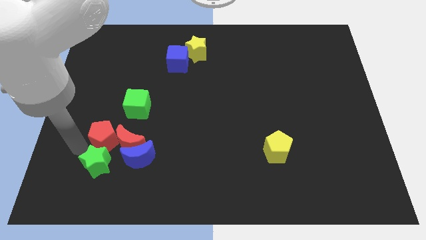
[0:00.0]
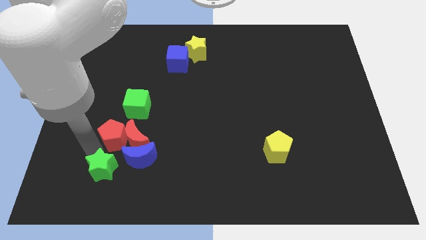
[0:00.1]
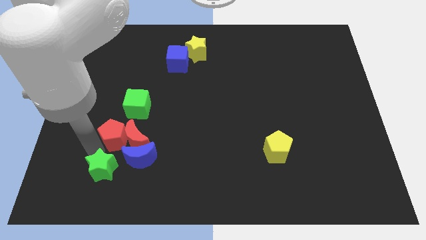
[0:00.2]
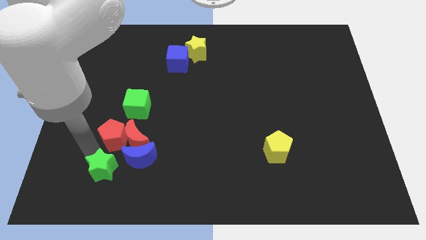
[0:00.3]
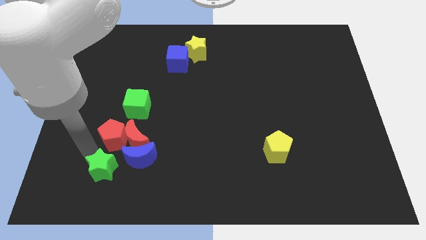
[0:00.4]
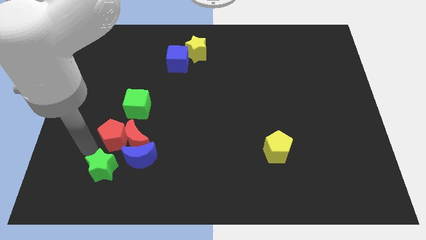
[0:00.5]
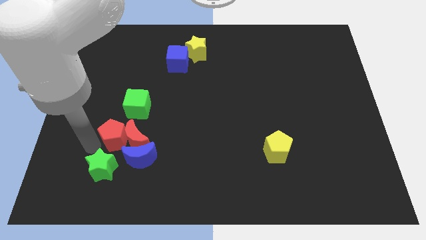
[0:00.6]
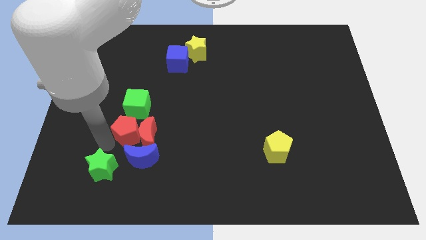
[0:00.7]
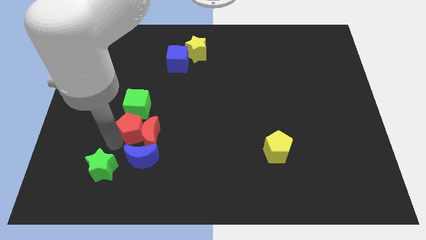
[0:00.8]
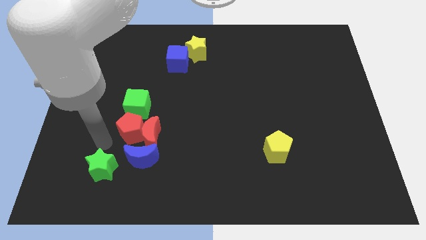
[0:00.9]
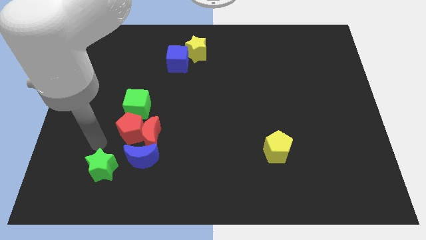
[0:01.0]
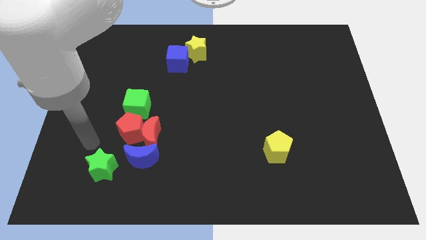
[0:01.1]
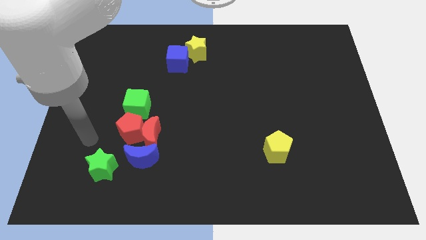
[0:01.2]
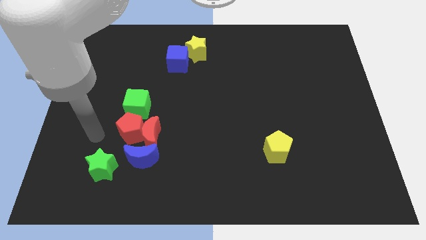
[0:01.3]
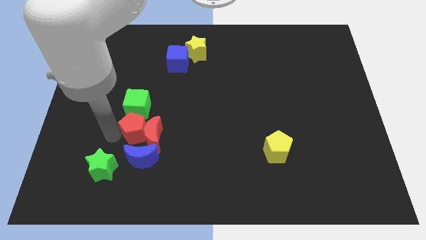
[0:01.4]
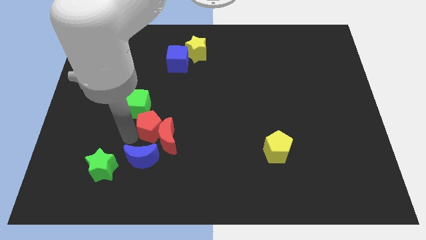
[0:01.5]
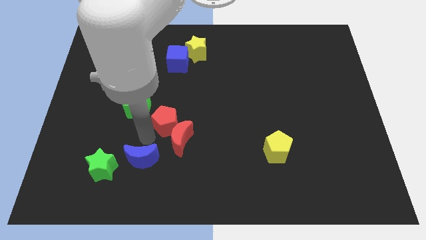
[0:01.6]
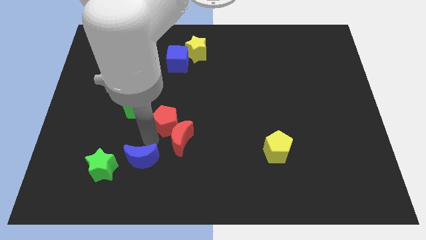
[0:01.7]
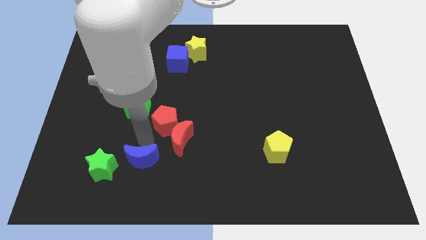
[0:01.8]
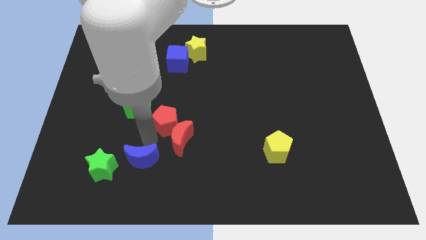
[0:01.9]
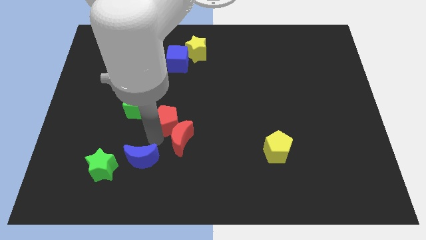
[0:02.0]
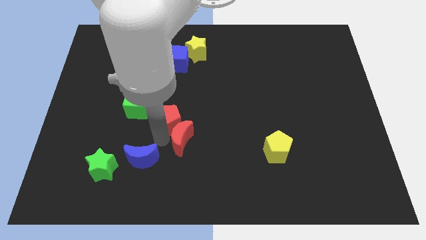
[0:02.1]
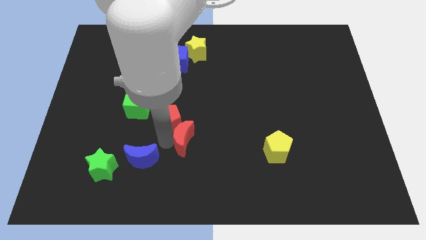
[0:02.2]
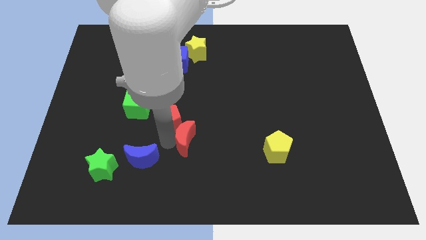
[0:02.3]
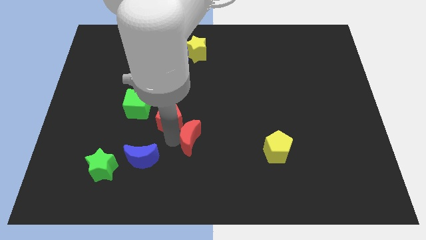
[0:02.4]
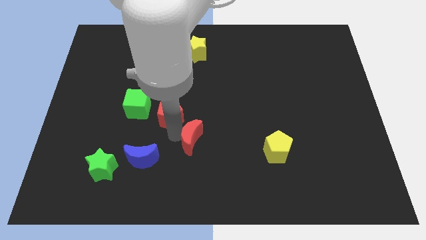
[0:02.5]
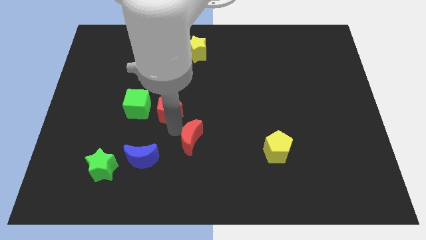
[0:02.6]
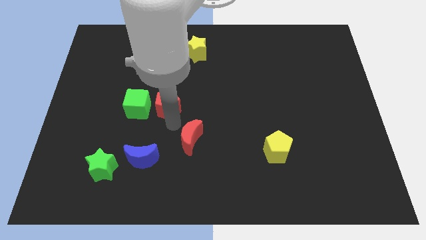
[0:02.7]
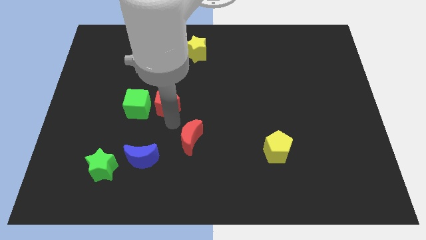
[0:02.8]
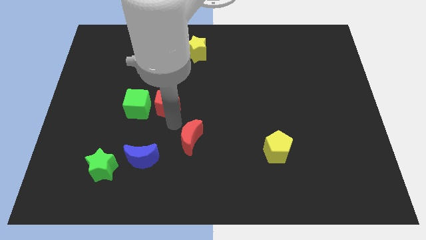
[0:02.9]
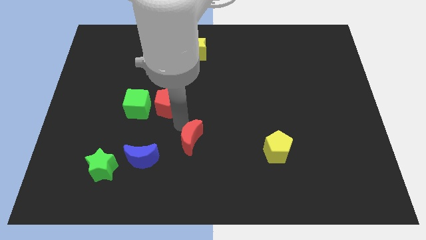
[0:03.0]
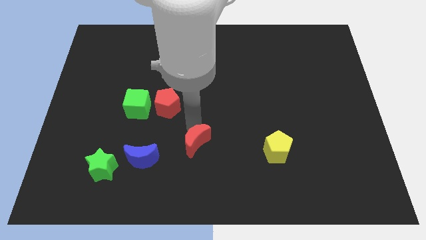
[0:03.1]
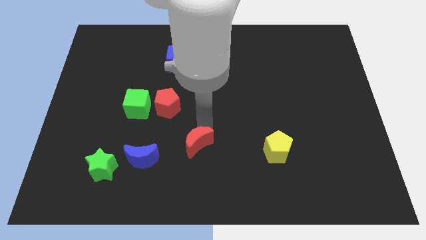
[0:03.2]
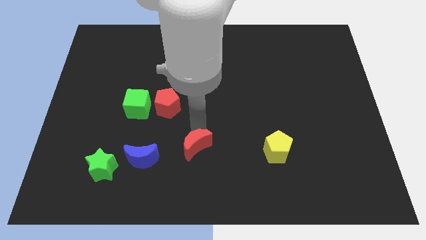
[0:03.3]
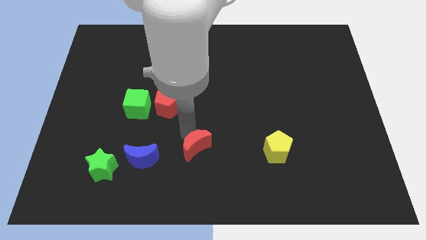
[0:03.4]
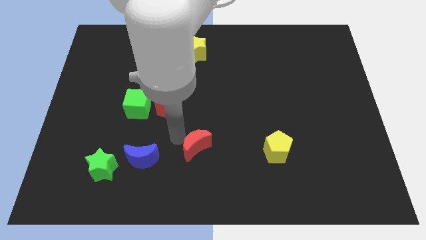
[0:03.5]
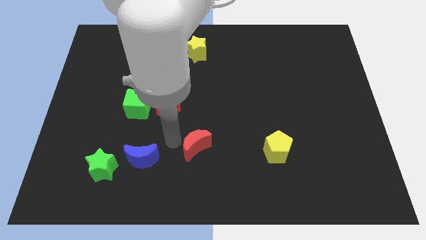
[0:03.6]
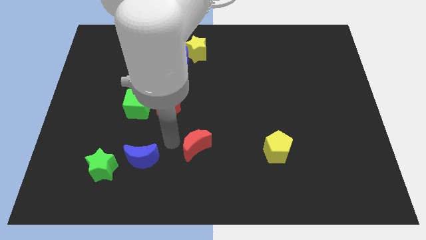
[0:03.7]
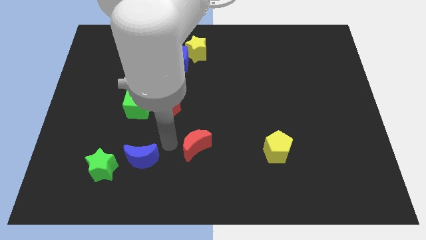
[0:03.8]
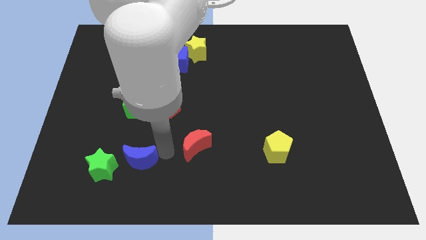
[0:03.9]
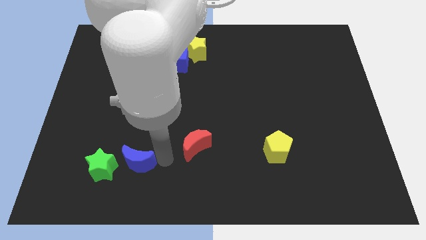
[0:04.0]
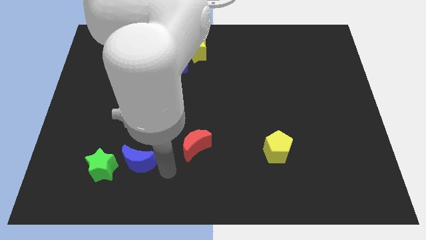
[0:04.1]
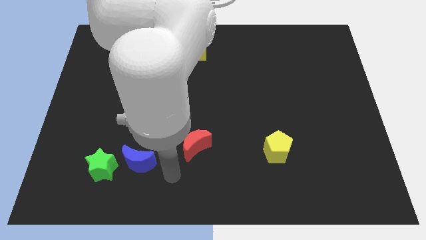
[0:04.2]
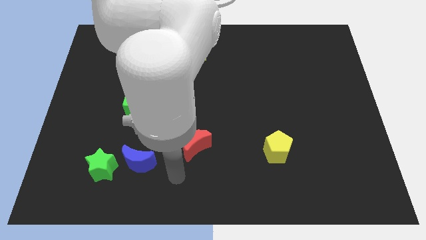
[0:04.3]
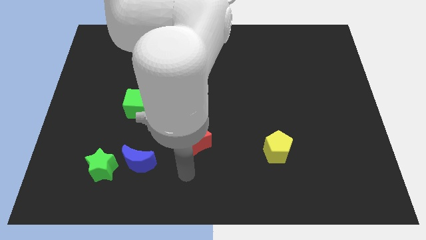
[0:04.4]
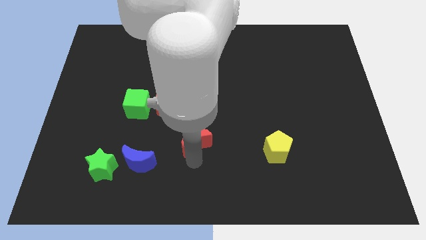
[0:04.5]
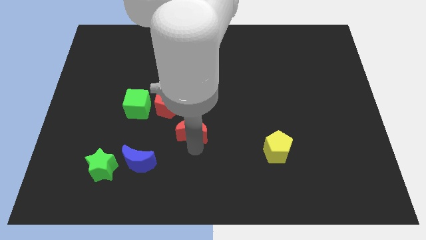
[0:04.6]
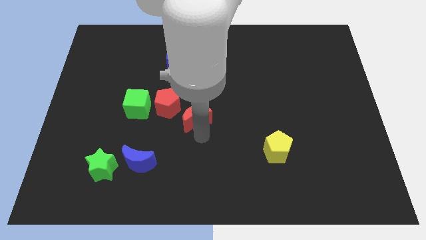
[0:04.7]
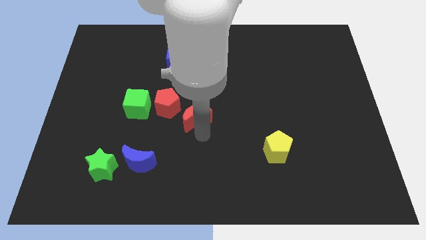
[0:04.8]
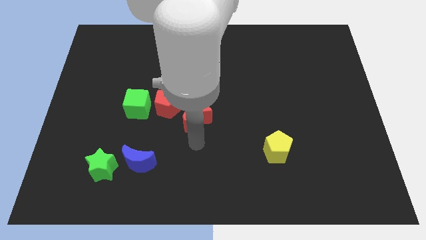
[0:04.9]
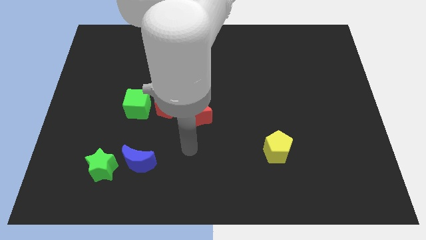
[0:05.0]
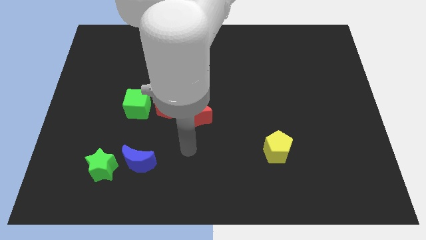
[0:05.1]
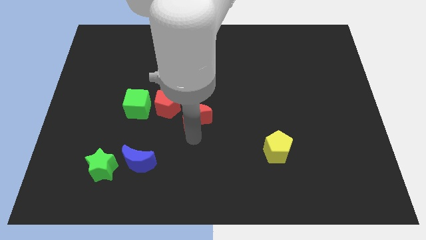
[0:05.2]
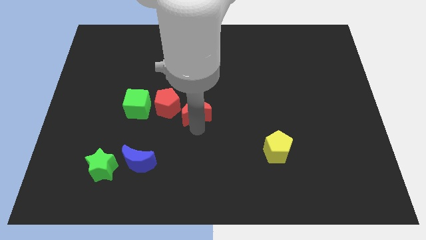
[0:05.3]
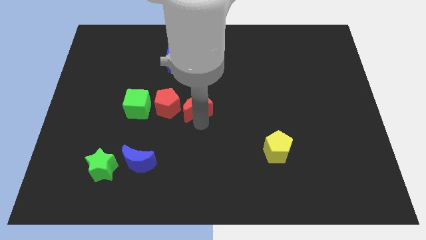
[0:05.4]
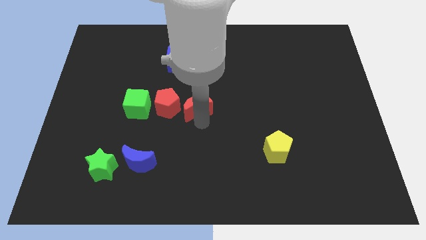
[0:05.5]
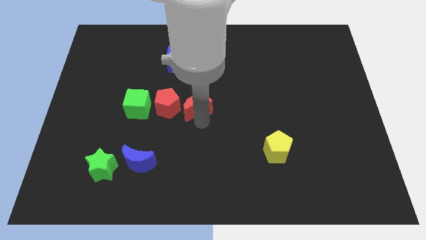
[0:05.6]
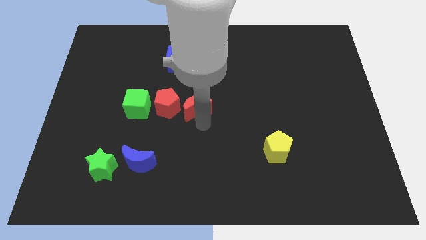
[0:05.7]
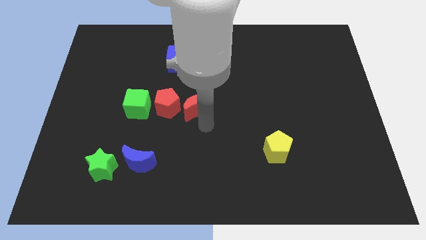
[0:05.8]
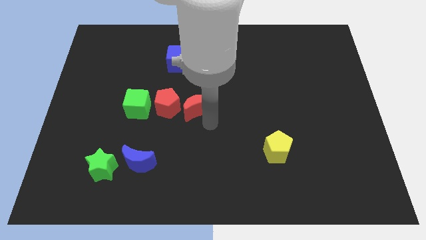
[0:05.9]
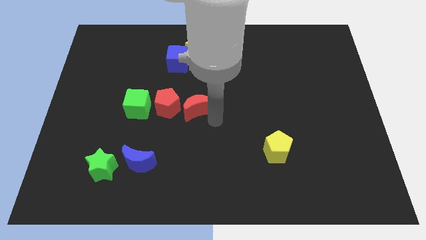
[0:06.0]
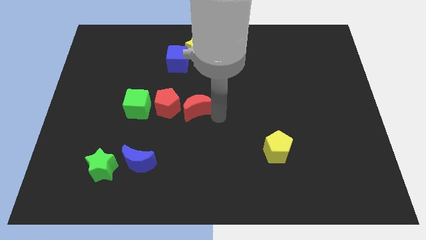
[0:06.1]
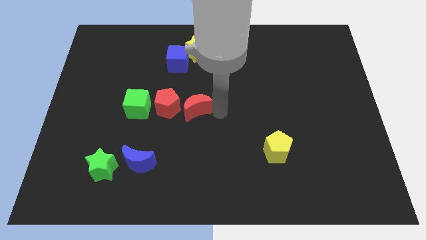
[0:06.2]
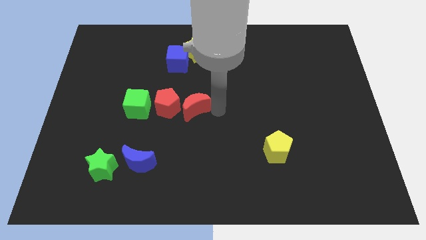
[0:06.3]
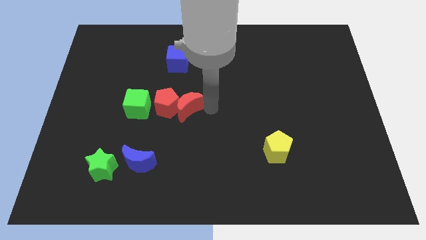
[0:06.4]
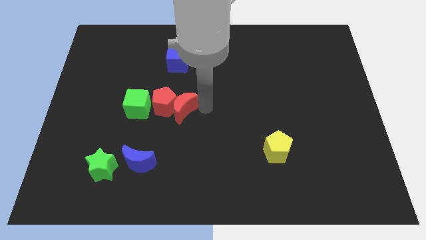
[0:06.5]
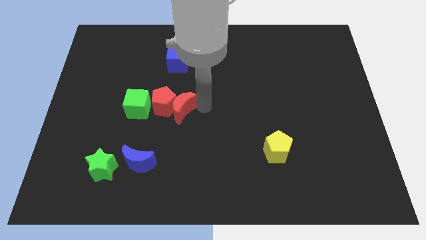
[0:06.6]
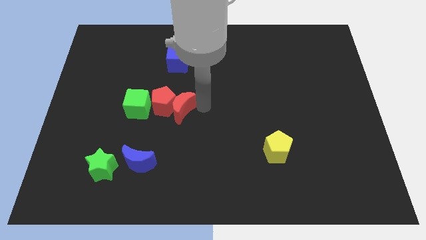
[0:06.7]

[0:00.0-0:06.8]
move the red moon and red pentagon to the right side of the green cube

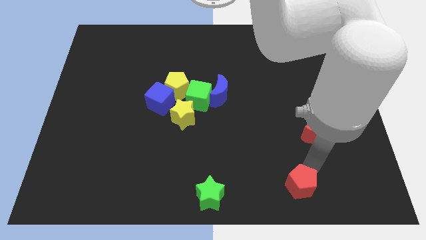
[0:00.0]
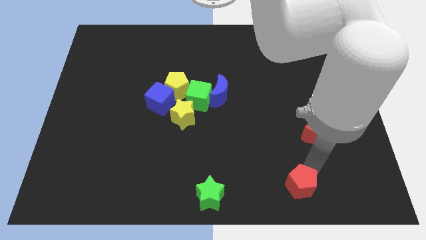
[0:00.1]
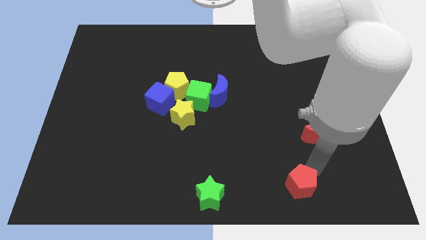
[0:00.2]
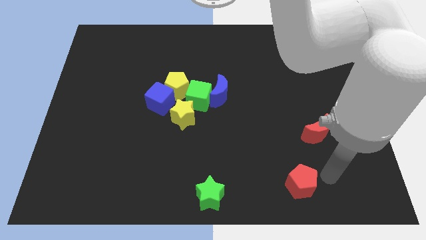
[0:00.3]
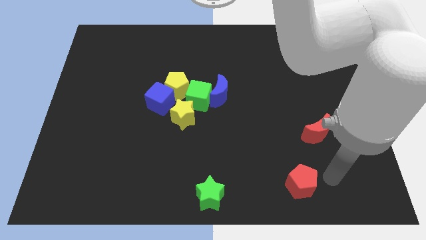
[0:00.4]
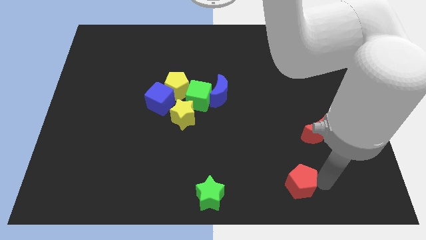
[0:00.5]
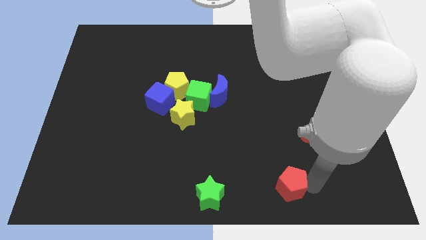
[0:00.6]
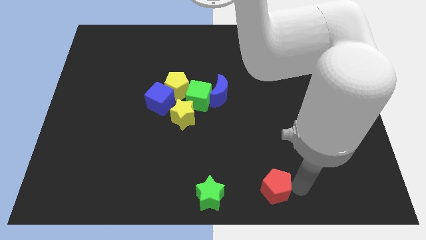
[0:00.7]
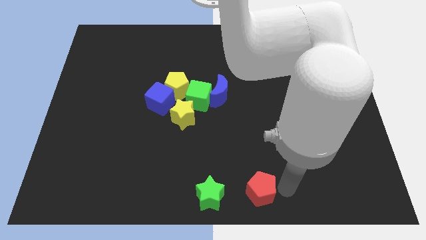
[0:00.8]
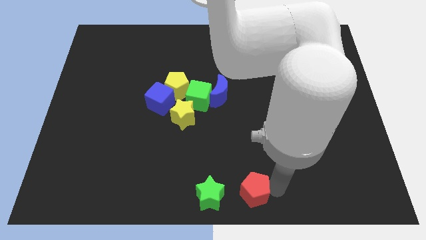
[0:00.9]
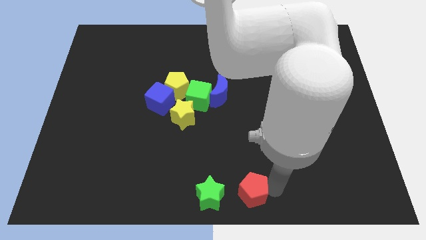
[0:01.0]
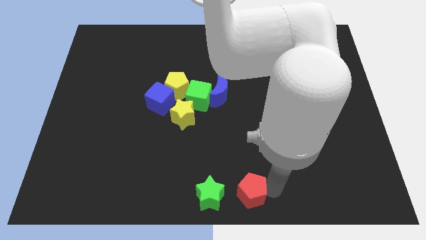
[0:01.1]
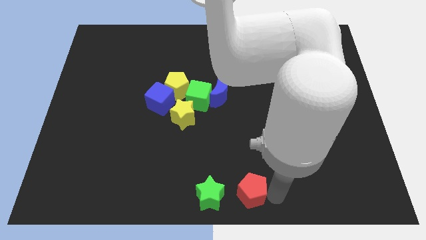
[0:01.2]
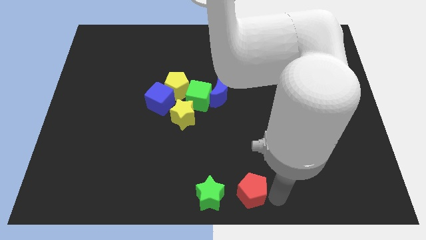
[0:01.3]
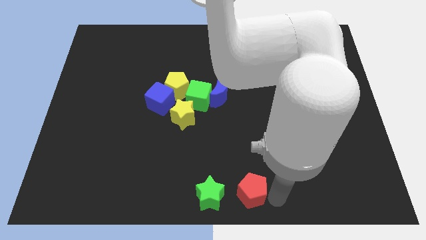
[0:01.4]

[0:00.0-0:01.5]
move the red pentagon to the right of the green star

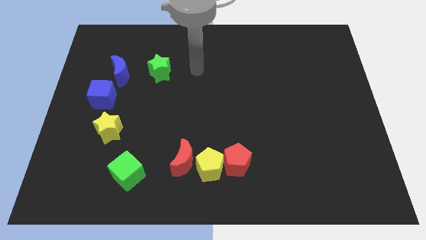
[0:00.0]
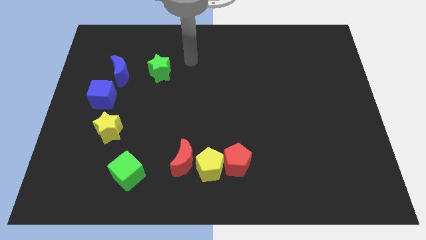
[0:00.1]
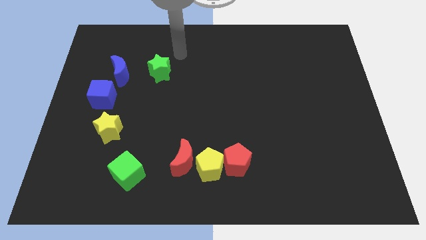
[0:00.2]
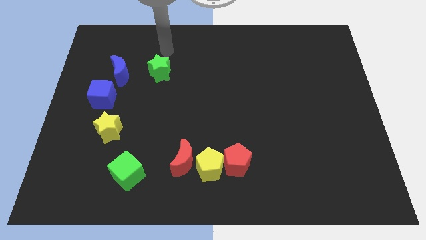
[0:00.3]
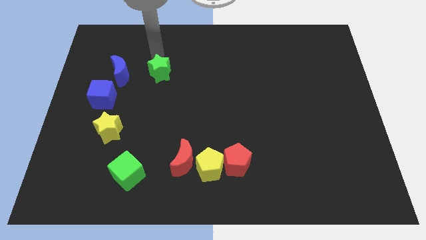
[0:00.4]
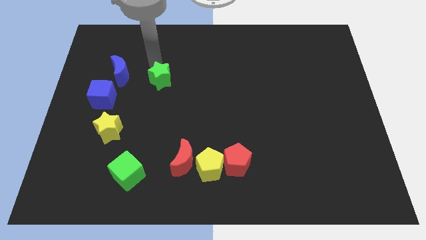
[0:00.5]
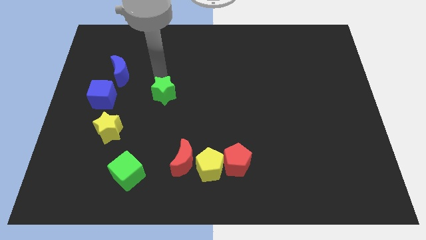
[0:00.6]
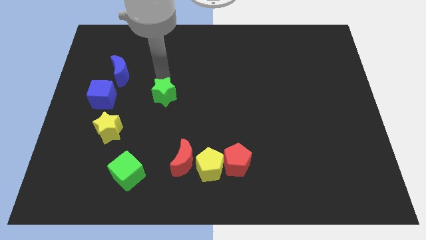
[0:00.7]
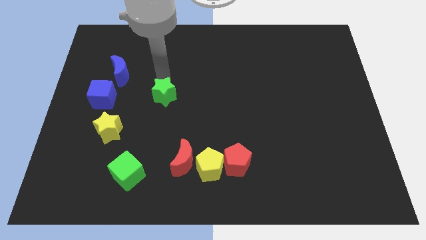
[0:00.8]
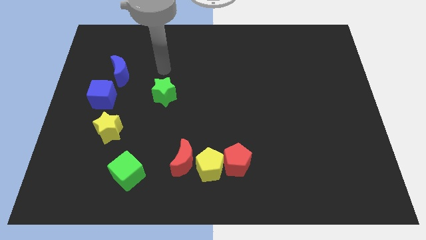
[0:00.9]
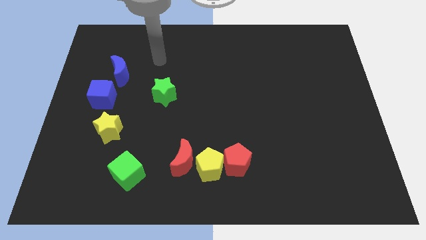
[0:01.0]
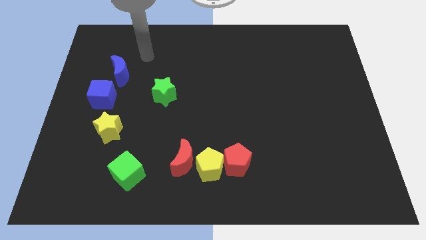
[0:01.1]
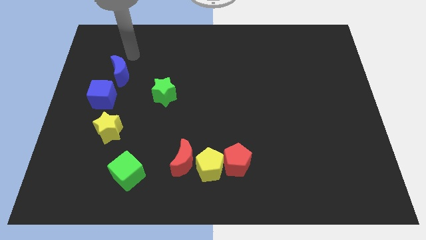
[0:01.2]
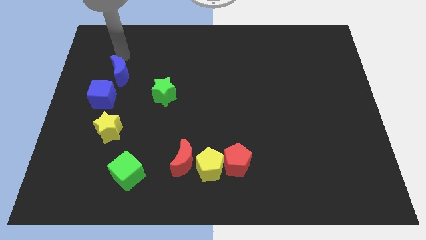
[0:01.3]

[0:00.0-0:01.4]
push the green star slightly downwards
